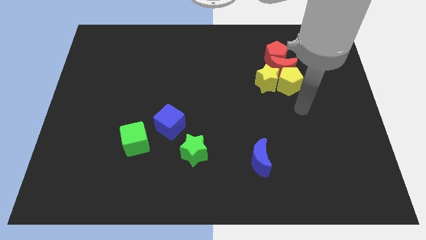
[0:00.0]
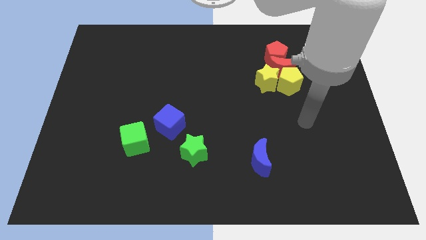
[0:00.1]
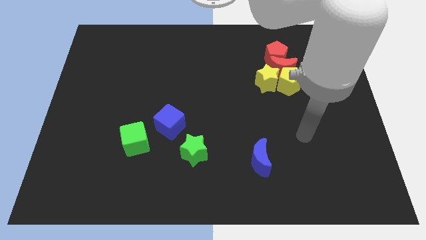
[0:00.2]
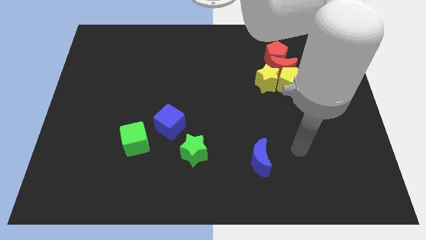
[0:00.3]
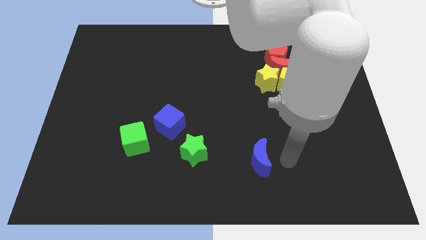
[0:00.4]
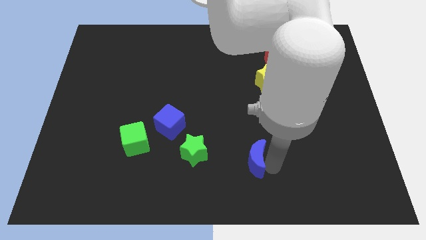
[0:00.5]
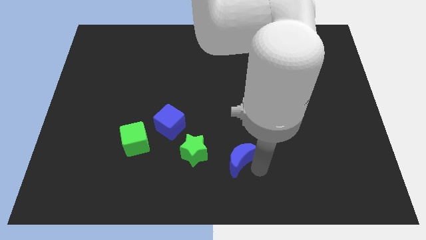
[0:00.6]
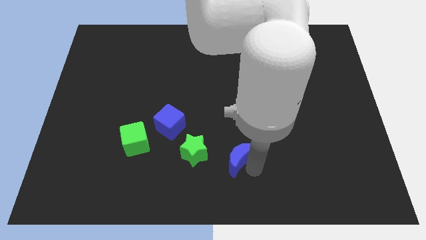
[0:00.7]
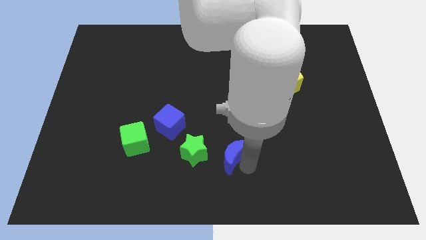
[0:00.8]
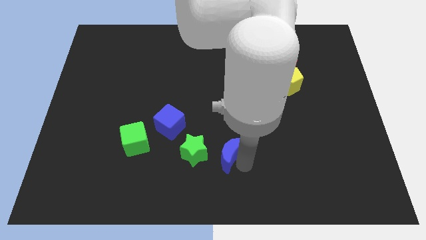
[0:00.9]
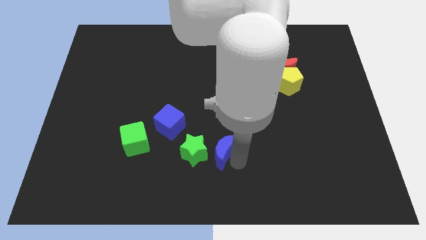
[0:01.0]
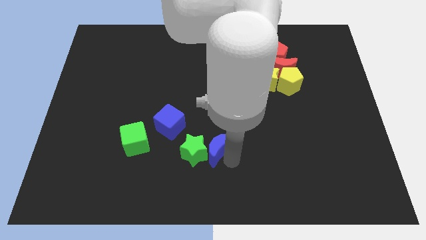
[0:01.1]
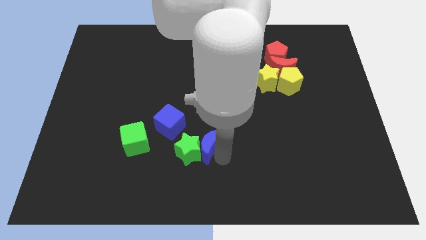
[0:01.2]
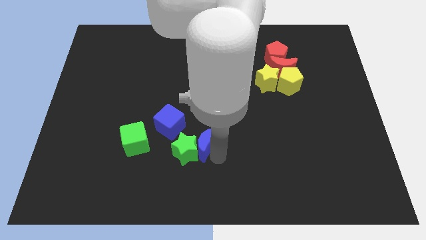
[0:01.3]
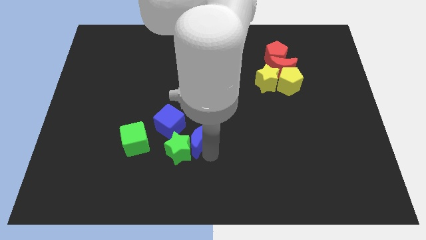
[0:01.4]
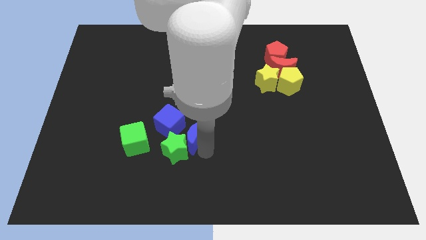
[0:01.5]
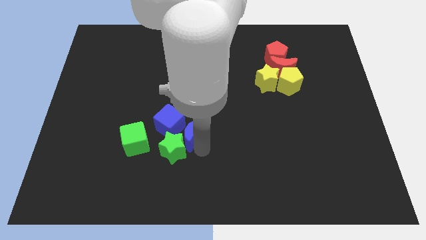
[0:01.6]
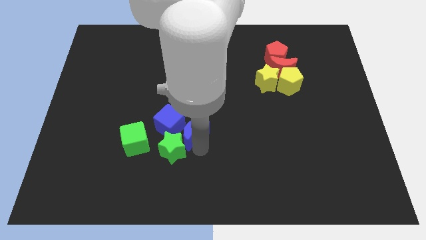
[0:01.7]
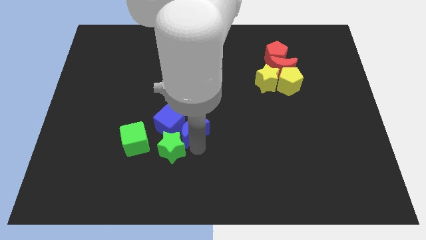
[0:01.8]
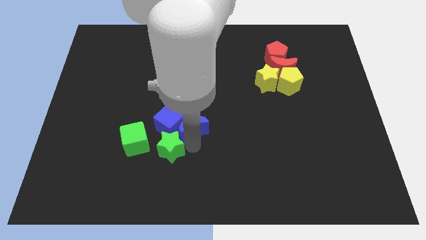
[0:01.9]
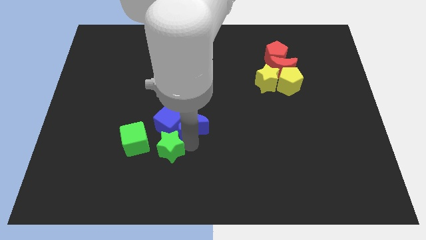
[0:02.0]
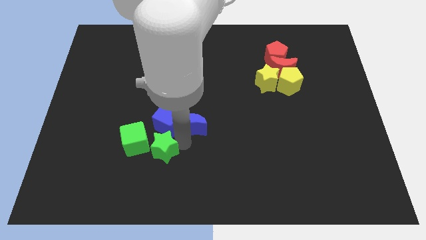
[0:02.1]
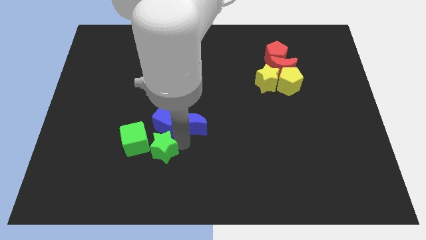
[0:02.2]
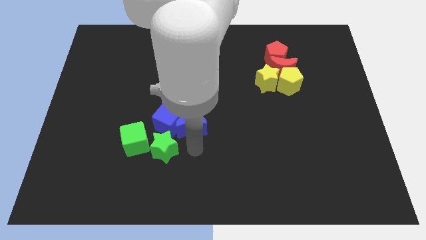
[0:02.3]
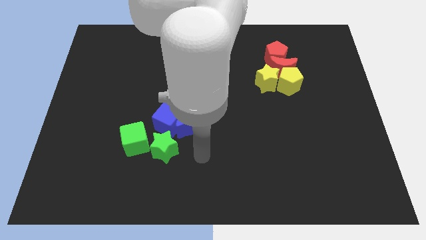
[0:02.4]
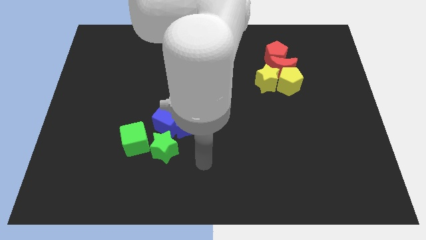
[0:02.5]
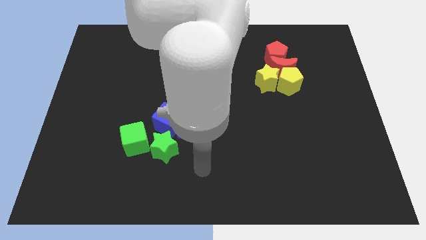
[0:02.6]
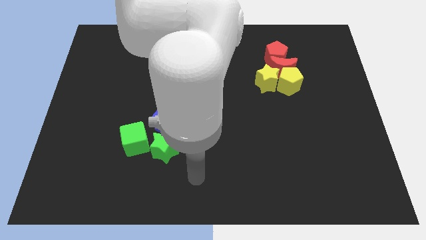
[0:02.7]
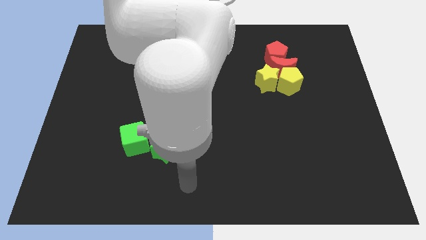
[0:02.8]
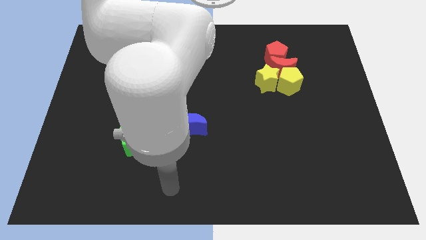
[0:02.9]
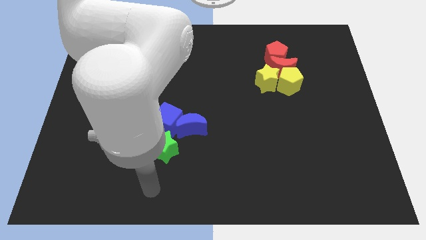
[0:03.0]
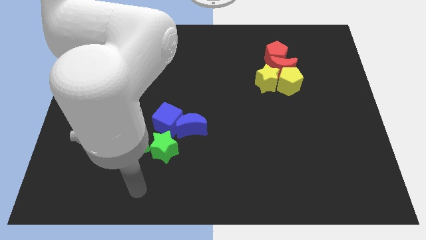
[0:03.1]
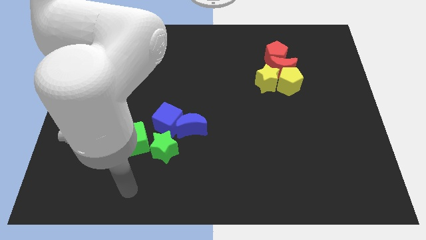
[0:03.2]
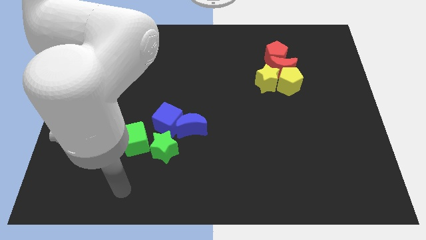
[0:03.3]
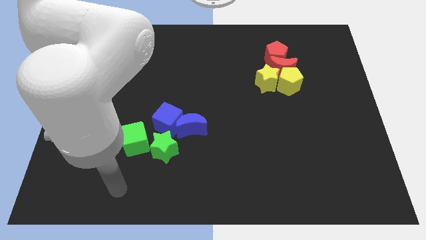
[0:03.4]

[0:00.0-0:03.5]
move the green and blue blocks diagonal to each other

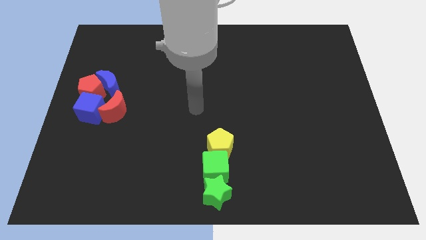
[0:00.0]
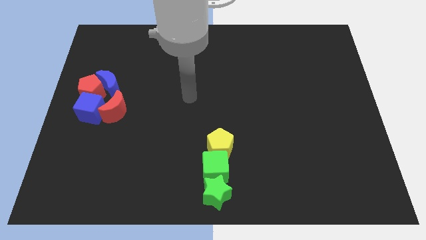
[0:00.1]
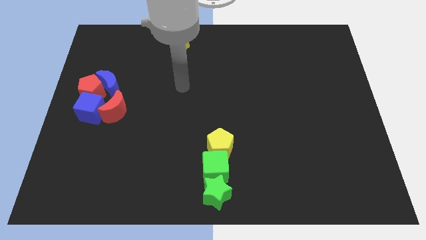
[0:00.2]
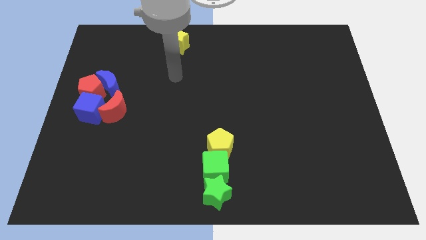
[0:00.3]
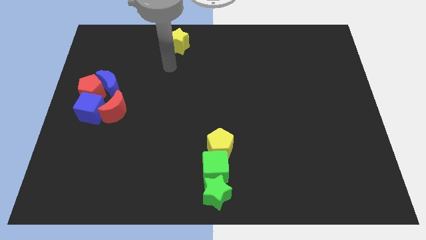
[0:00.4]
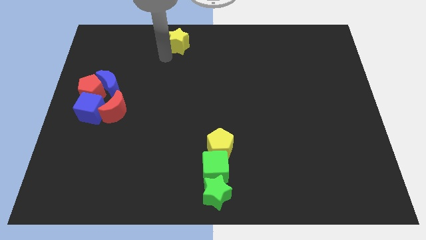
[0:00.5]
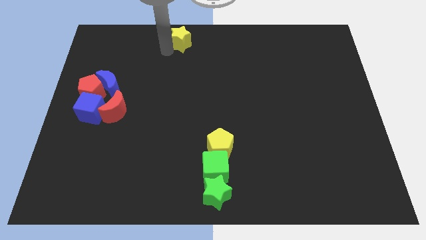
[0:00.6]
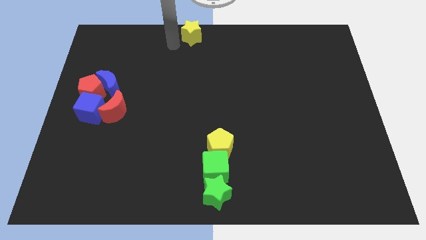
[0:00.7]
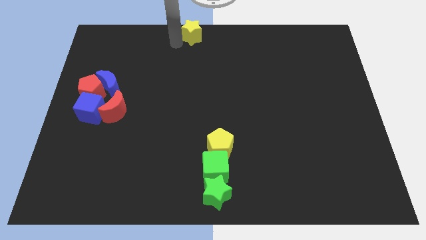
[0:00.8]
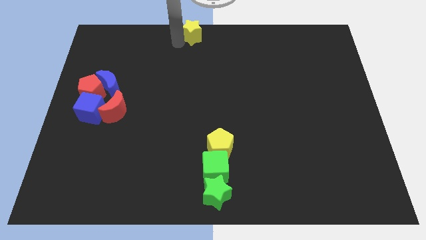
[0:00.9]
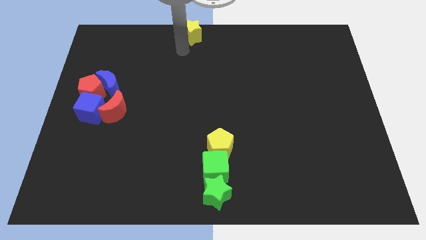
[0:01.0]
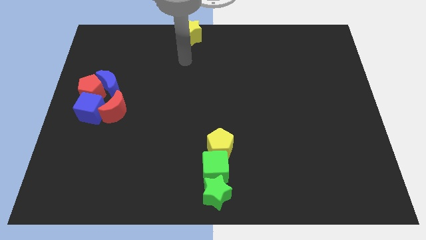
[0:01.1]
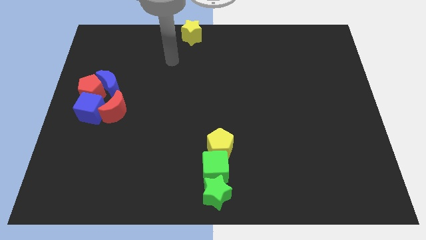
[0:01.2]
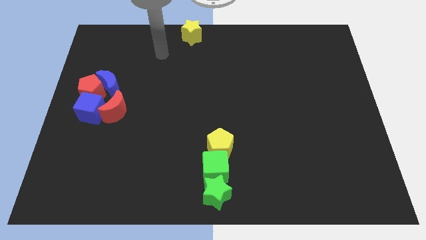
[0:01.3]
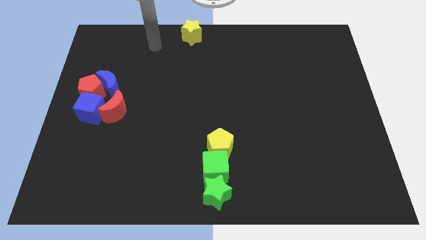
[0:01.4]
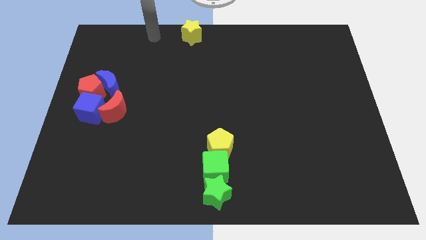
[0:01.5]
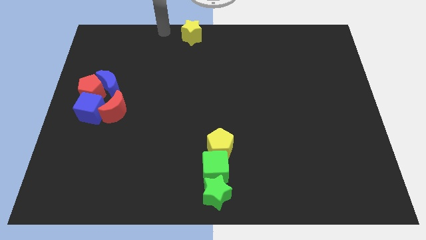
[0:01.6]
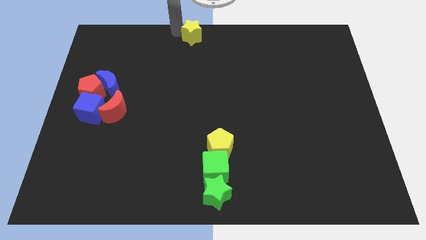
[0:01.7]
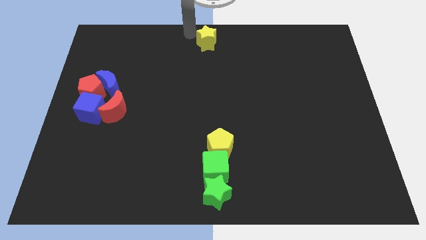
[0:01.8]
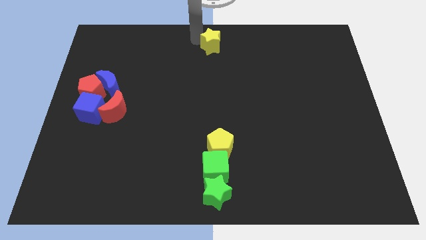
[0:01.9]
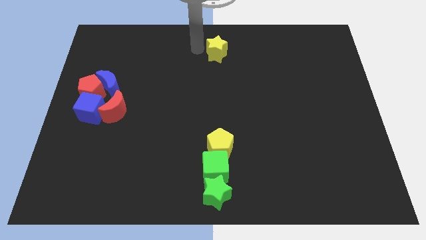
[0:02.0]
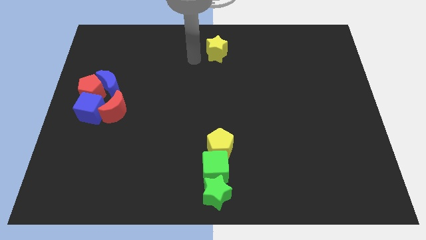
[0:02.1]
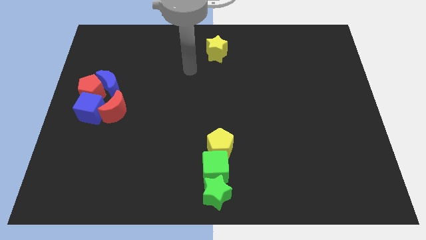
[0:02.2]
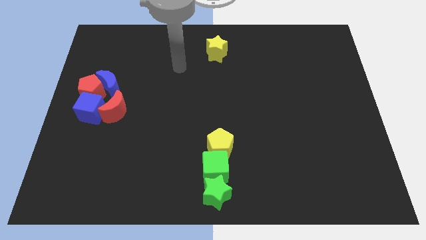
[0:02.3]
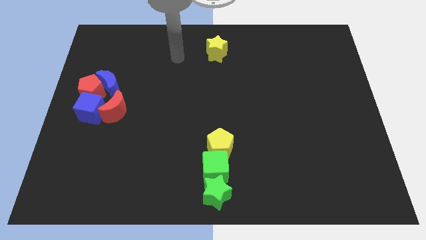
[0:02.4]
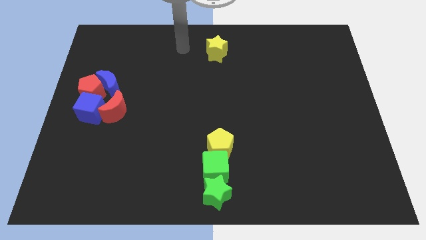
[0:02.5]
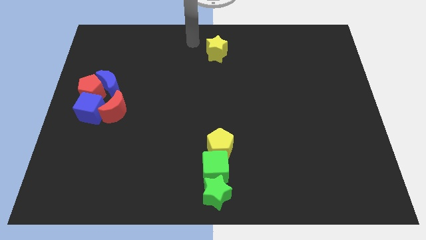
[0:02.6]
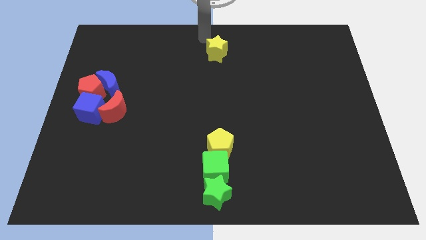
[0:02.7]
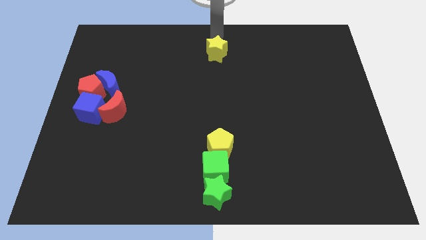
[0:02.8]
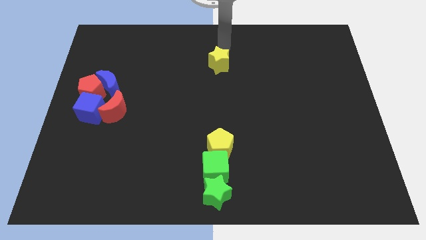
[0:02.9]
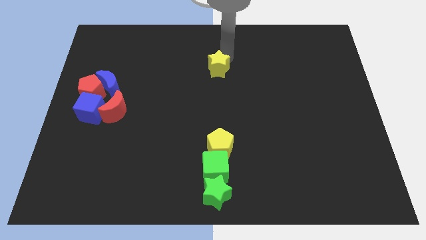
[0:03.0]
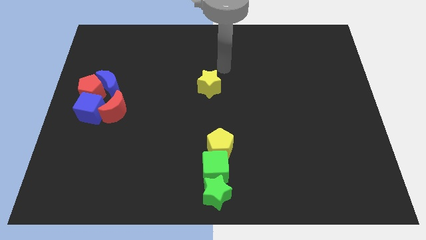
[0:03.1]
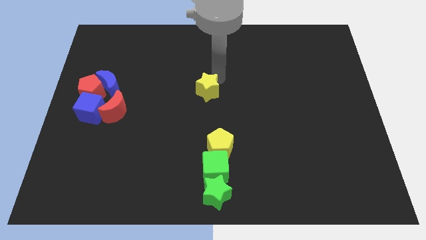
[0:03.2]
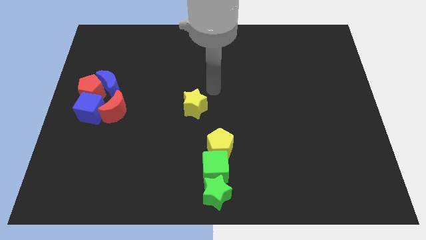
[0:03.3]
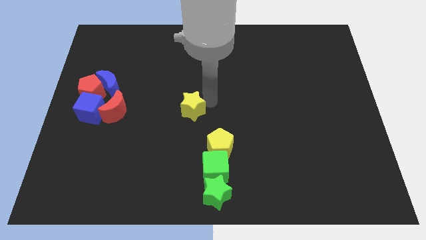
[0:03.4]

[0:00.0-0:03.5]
push the yellow star to the center of the board

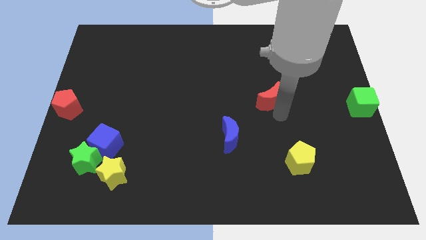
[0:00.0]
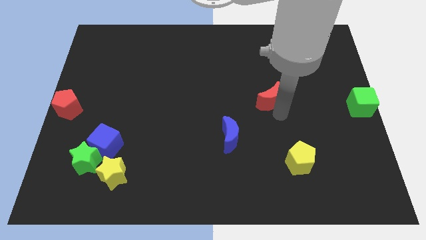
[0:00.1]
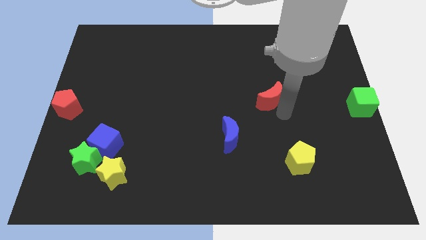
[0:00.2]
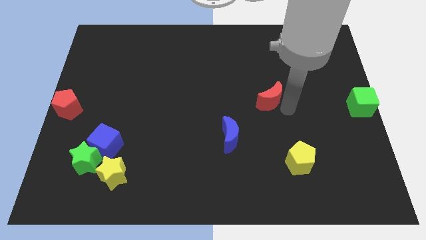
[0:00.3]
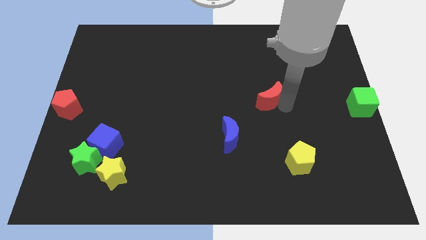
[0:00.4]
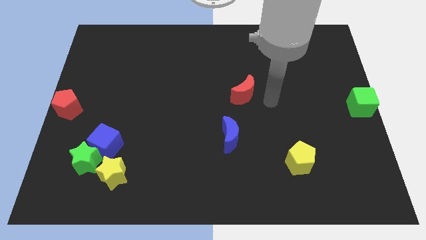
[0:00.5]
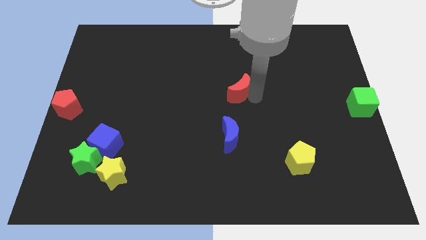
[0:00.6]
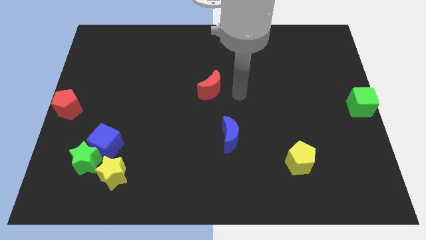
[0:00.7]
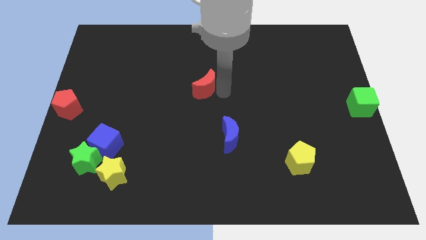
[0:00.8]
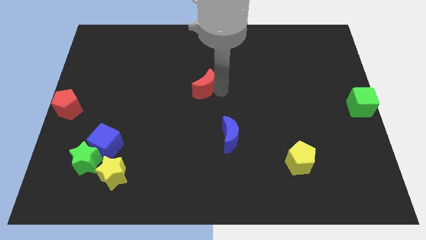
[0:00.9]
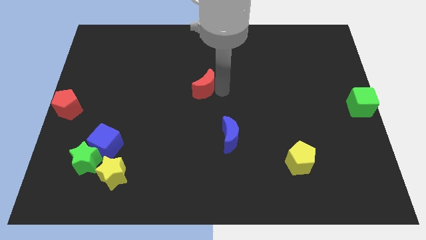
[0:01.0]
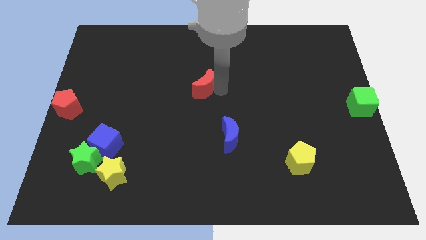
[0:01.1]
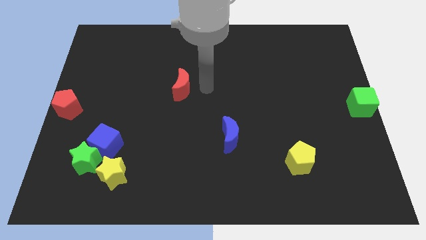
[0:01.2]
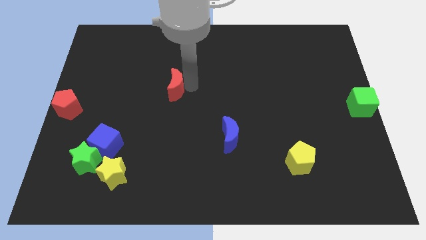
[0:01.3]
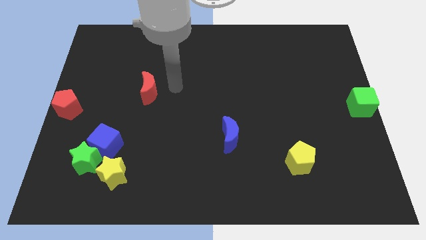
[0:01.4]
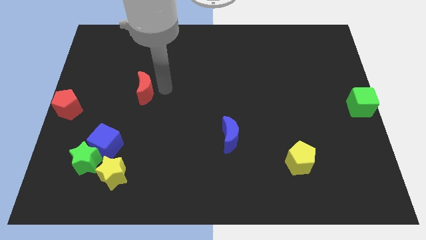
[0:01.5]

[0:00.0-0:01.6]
move the red crescent to the left of the board

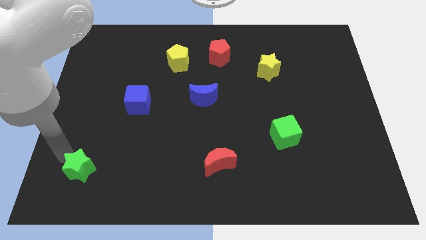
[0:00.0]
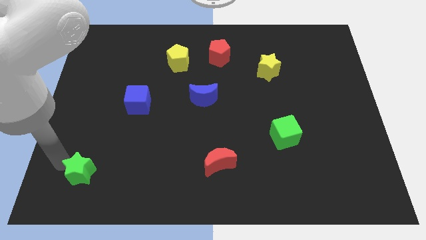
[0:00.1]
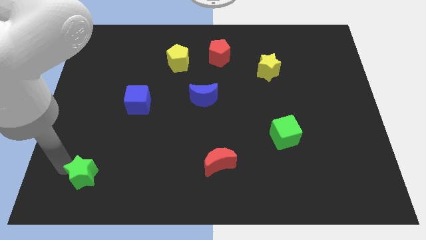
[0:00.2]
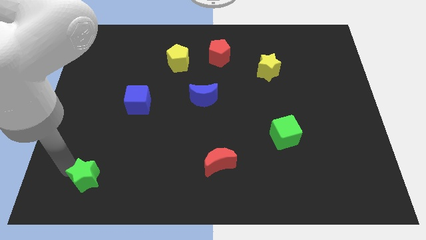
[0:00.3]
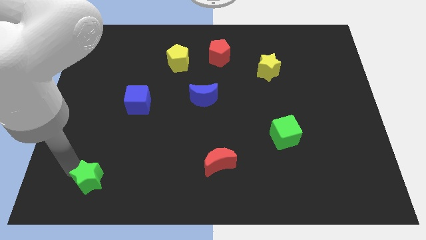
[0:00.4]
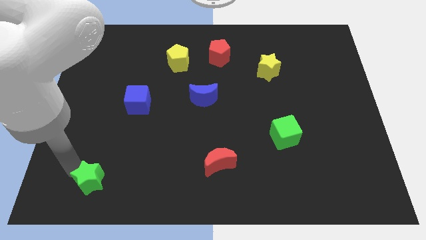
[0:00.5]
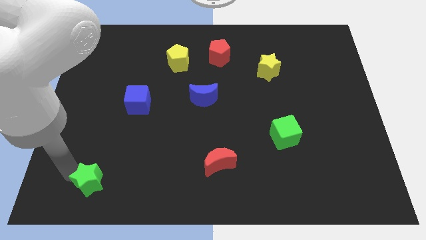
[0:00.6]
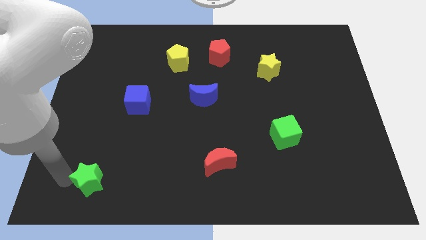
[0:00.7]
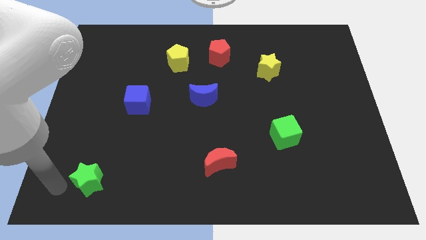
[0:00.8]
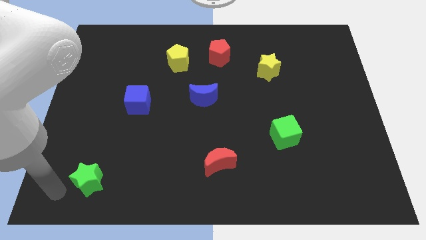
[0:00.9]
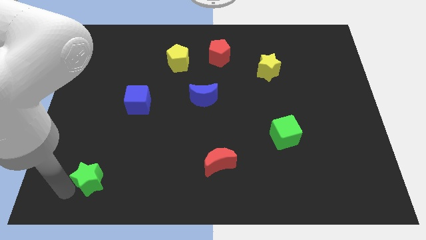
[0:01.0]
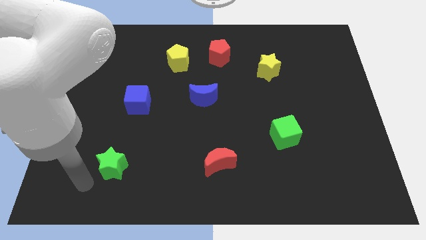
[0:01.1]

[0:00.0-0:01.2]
move the green star slightly to the right
